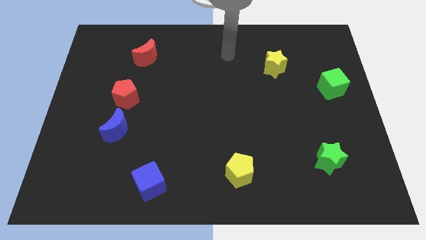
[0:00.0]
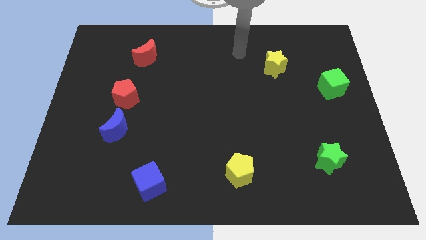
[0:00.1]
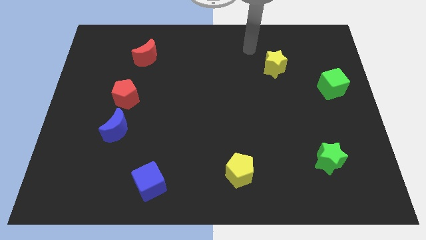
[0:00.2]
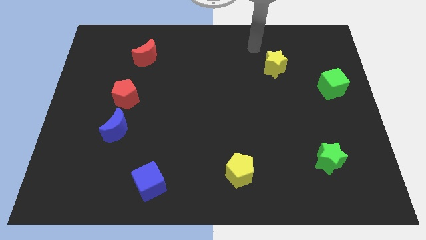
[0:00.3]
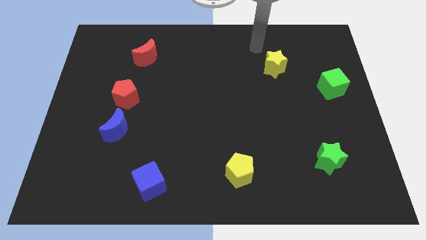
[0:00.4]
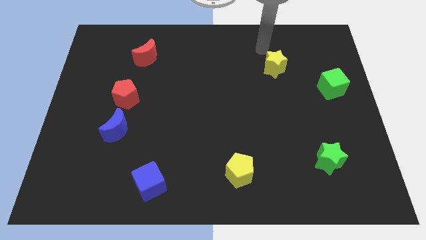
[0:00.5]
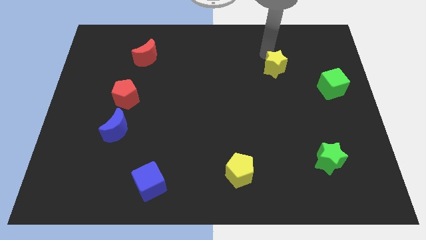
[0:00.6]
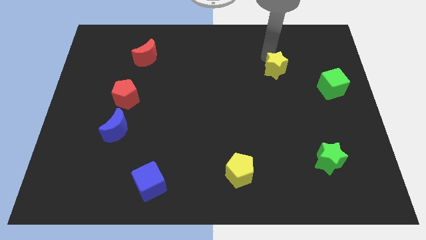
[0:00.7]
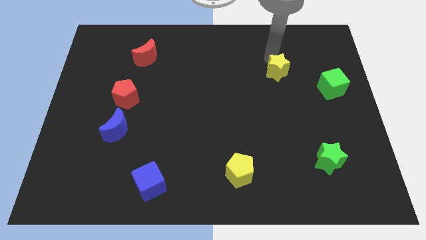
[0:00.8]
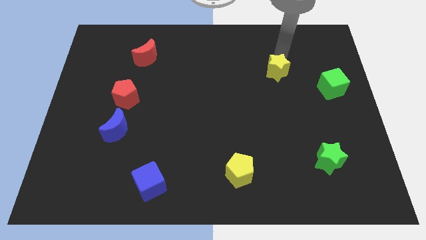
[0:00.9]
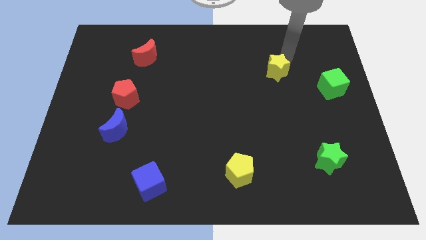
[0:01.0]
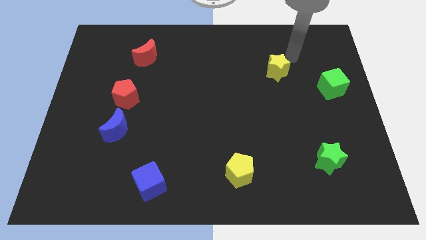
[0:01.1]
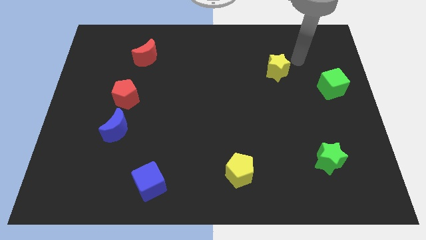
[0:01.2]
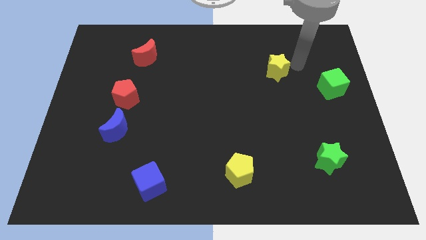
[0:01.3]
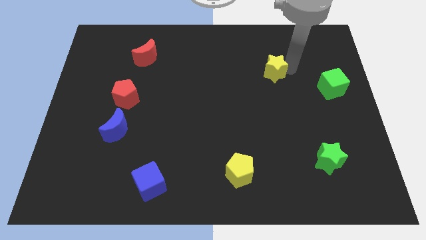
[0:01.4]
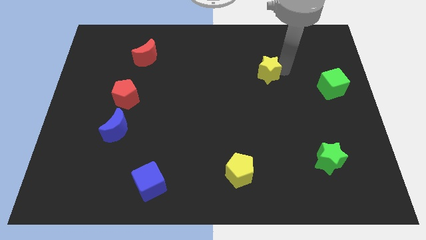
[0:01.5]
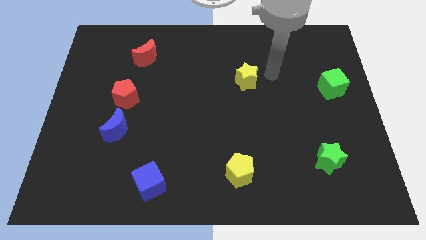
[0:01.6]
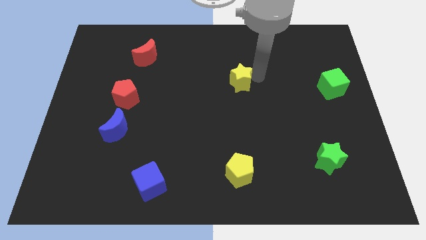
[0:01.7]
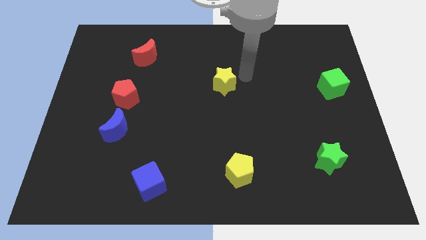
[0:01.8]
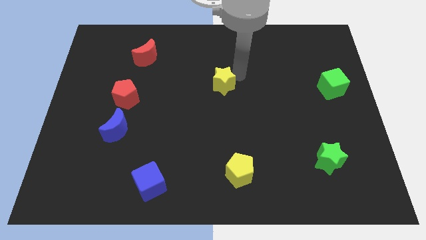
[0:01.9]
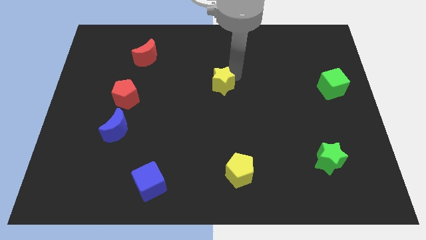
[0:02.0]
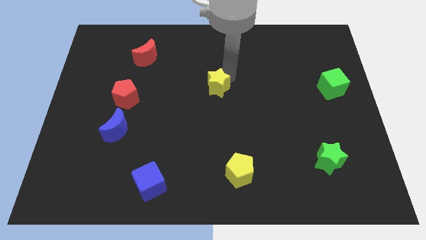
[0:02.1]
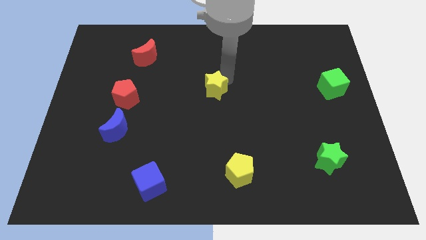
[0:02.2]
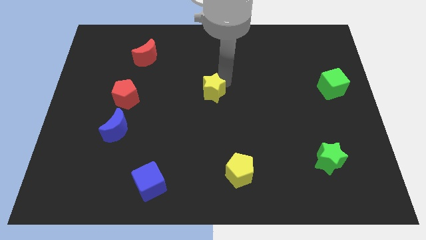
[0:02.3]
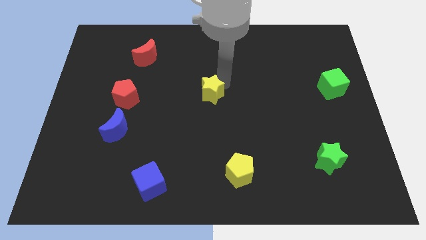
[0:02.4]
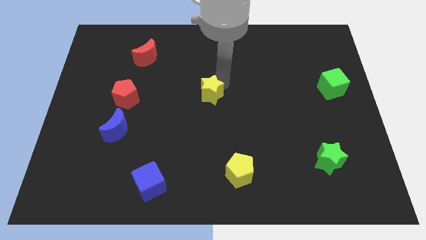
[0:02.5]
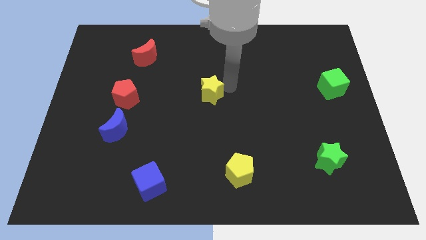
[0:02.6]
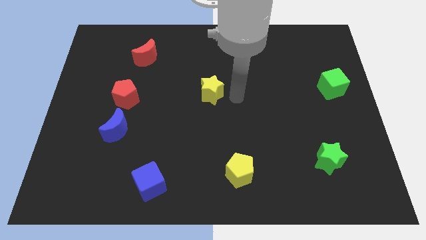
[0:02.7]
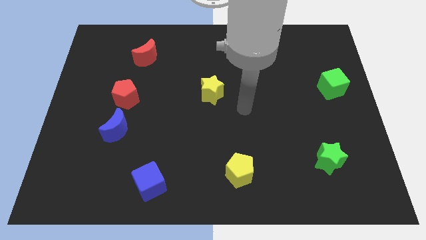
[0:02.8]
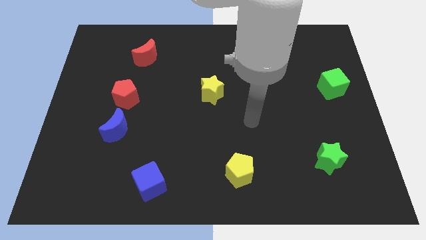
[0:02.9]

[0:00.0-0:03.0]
place the yellow star in between the red pentagon and the green cube

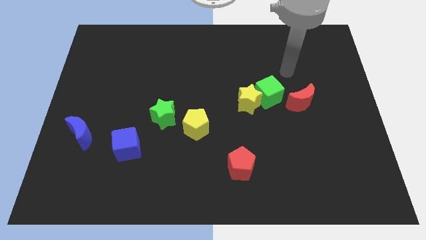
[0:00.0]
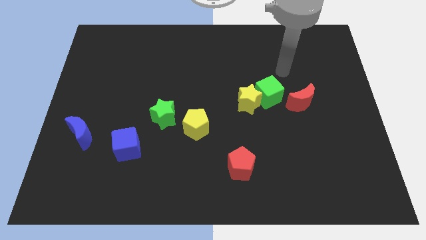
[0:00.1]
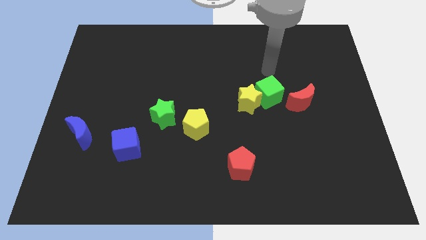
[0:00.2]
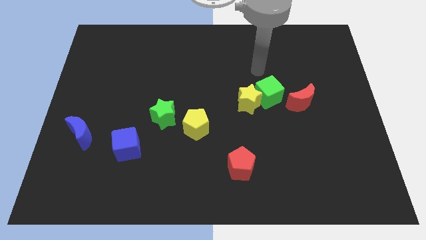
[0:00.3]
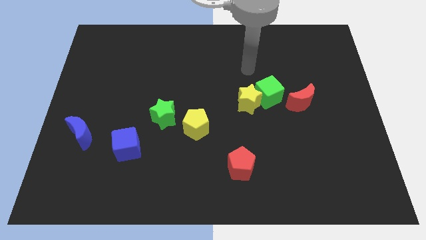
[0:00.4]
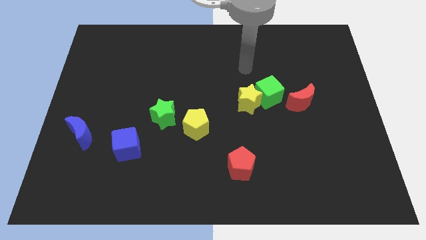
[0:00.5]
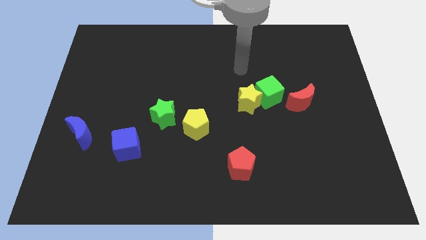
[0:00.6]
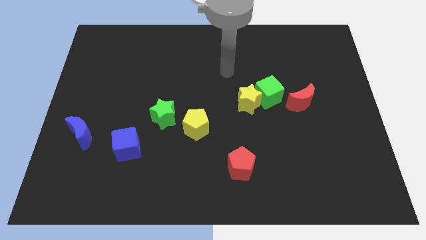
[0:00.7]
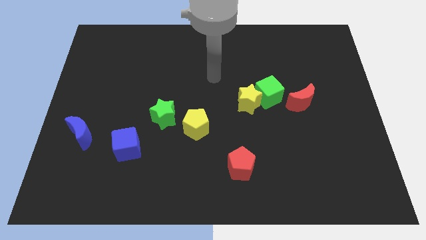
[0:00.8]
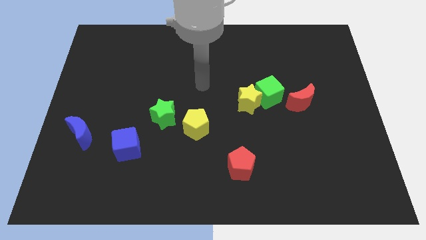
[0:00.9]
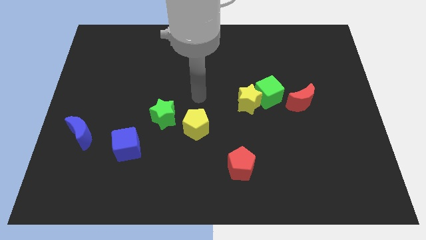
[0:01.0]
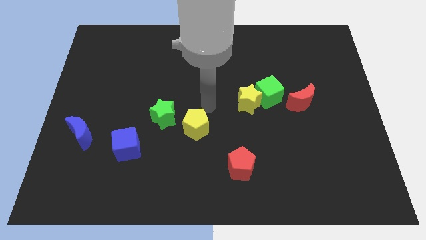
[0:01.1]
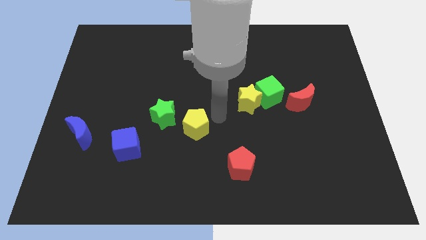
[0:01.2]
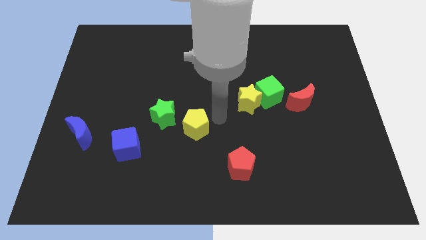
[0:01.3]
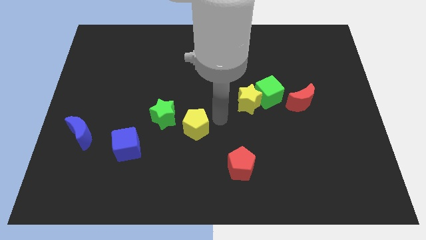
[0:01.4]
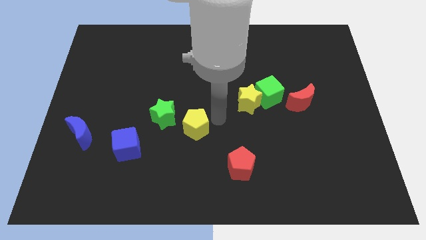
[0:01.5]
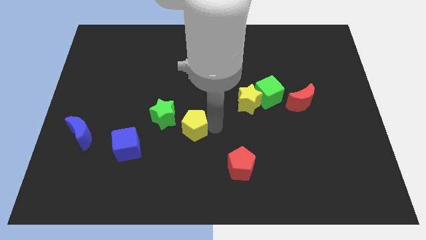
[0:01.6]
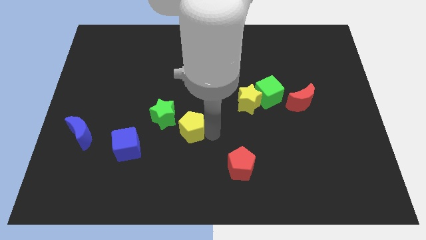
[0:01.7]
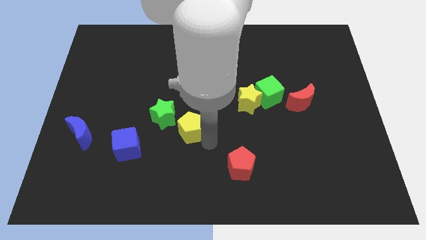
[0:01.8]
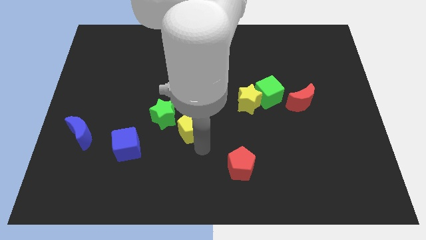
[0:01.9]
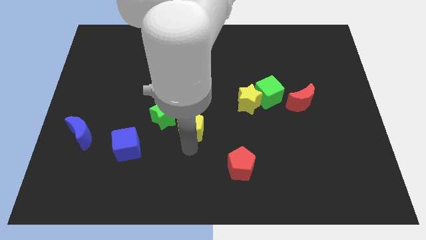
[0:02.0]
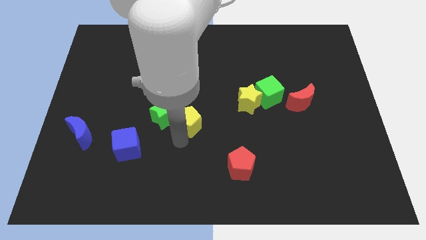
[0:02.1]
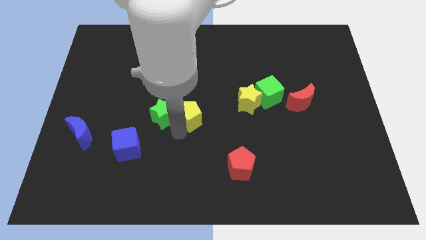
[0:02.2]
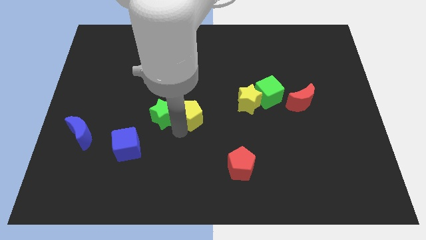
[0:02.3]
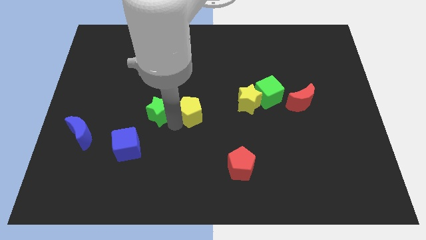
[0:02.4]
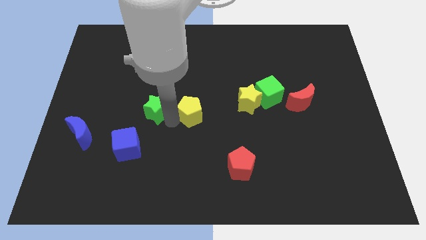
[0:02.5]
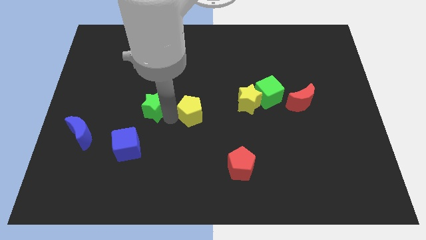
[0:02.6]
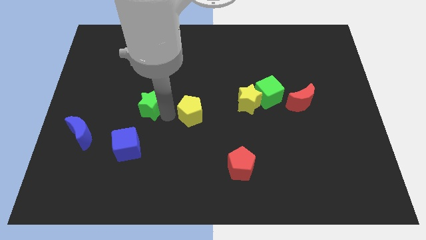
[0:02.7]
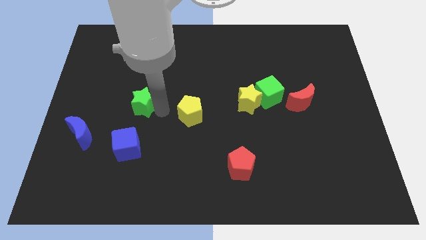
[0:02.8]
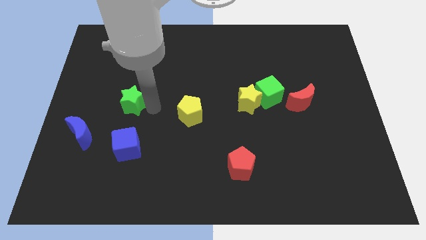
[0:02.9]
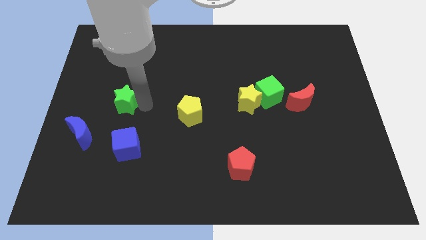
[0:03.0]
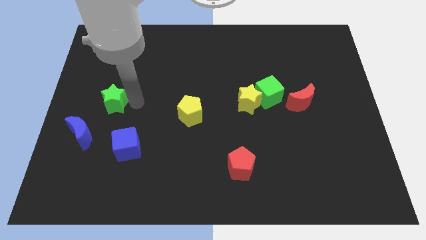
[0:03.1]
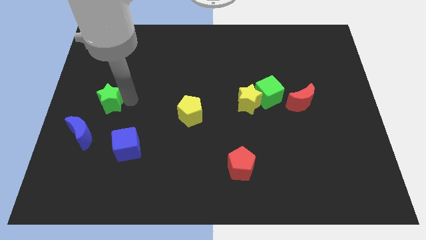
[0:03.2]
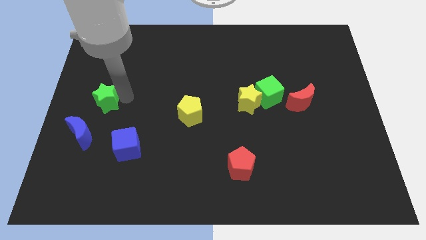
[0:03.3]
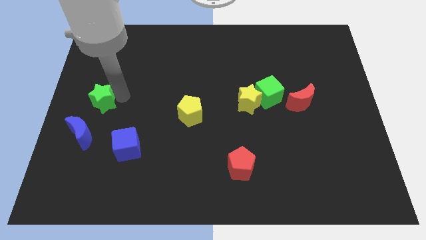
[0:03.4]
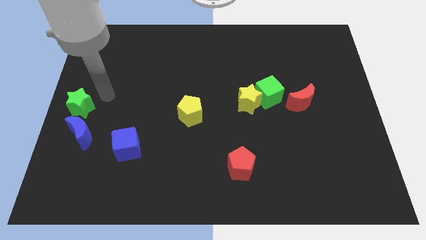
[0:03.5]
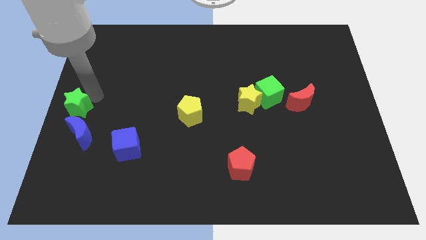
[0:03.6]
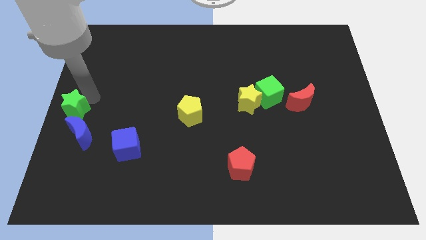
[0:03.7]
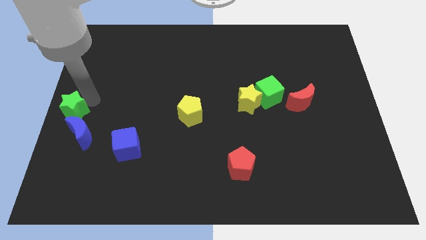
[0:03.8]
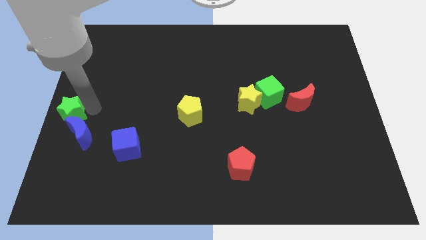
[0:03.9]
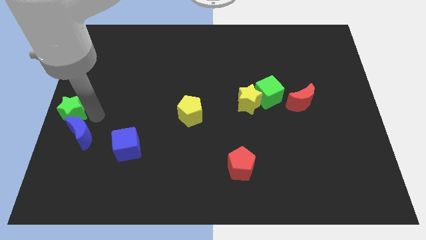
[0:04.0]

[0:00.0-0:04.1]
separate green star from yellow pentagon

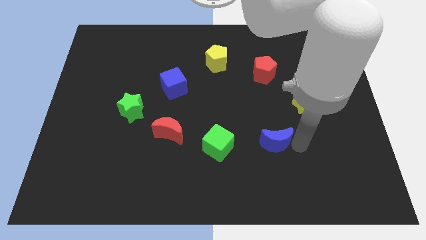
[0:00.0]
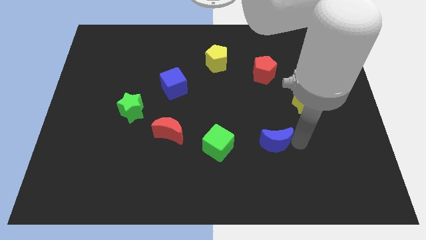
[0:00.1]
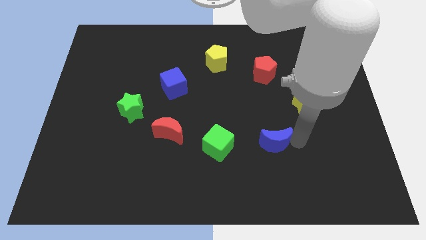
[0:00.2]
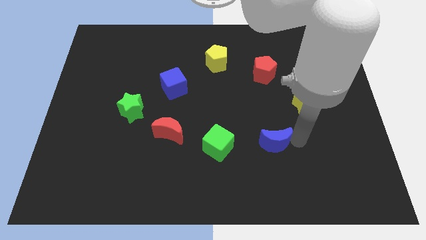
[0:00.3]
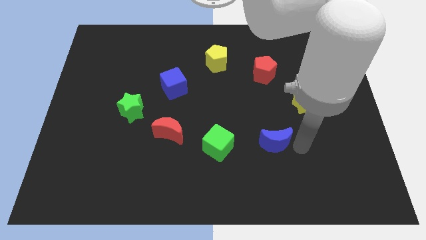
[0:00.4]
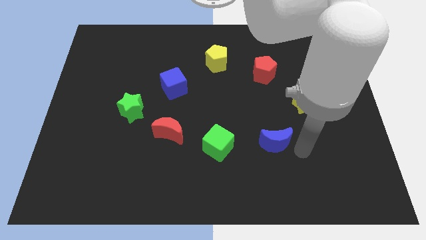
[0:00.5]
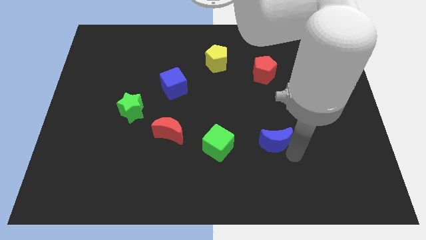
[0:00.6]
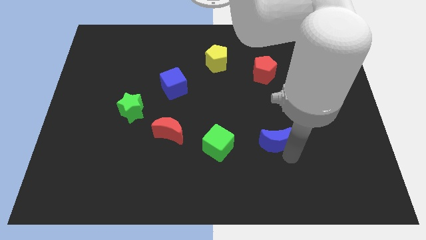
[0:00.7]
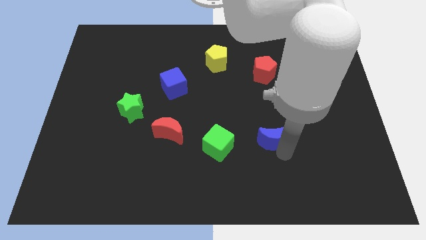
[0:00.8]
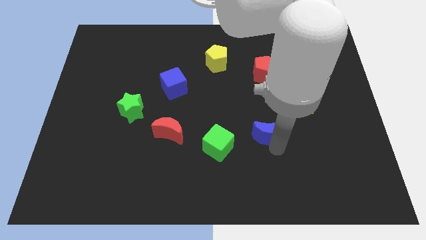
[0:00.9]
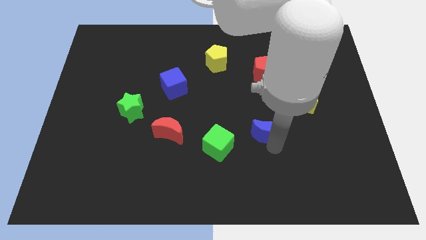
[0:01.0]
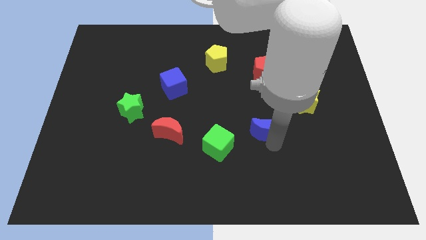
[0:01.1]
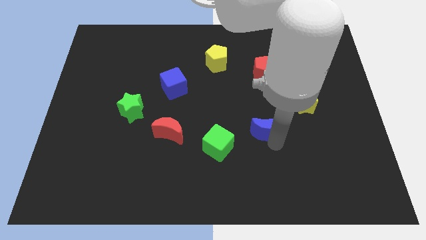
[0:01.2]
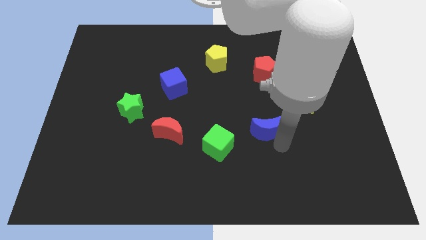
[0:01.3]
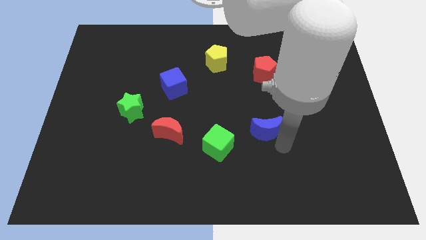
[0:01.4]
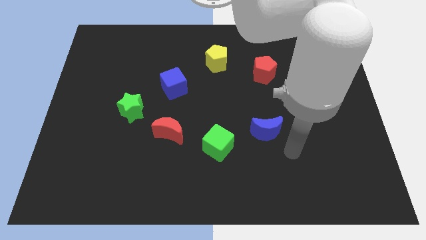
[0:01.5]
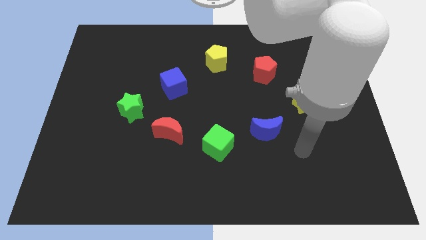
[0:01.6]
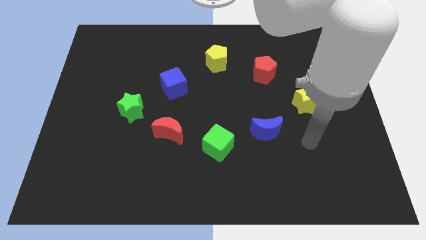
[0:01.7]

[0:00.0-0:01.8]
move the blue crescent upwards
